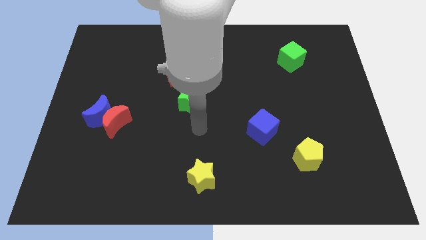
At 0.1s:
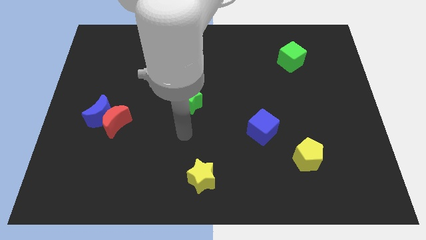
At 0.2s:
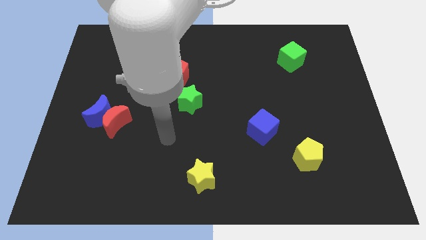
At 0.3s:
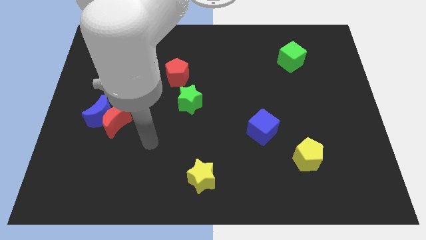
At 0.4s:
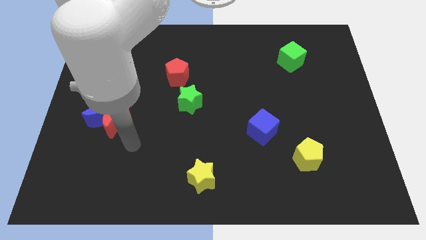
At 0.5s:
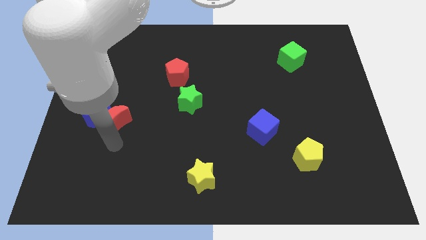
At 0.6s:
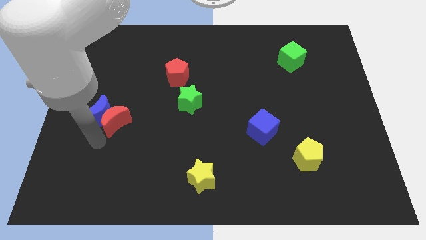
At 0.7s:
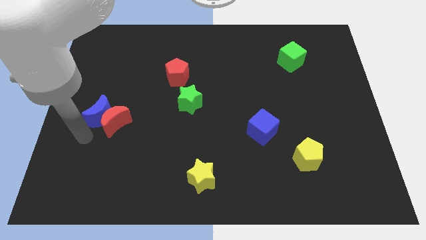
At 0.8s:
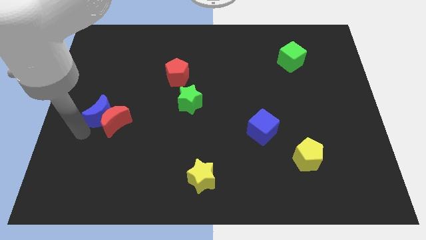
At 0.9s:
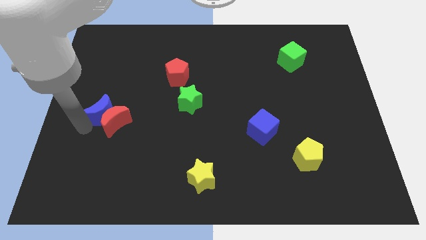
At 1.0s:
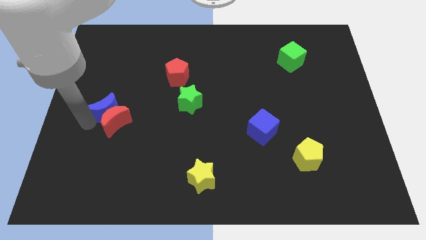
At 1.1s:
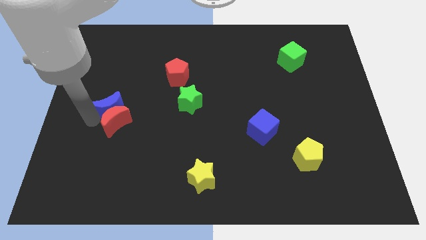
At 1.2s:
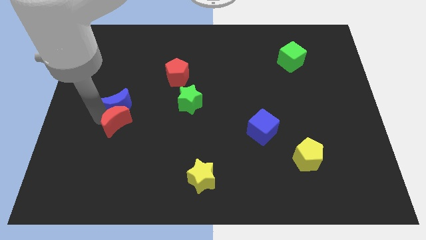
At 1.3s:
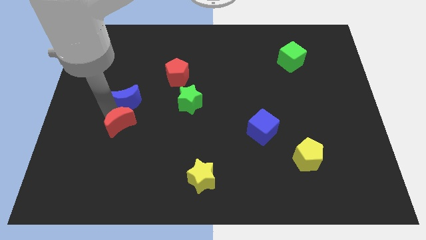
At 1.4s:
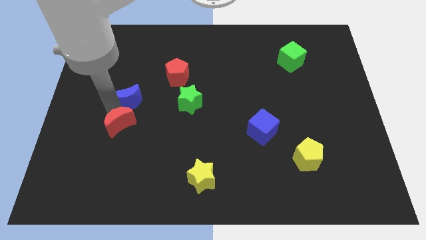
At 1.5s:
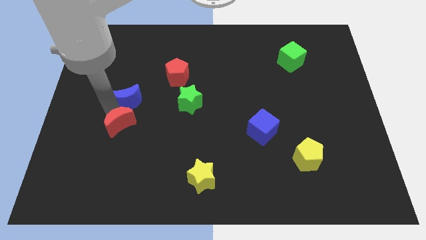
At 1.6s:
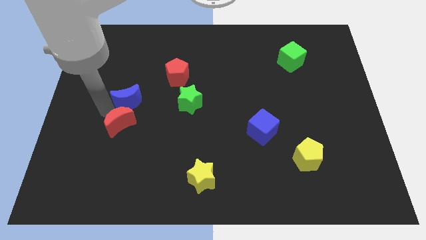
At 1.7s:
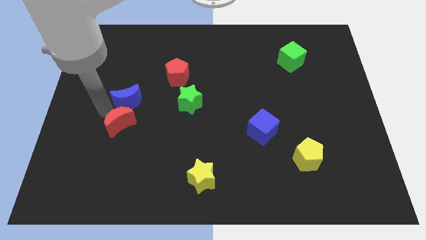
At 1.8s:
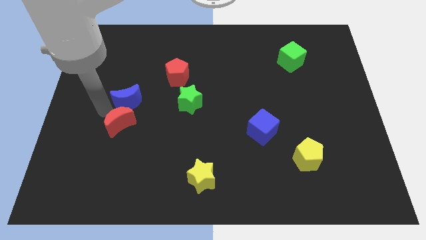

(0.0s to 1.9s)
slightly push the blue moon parallel to green star

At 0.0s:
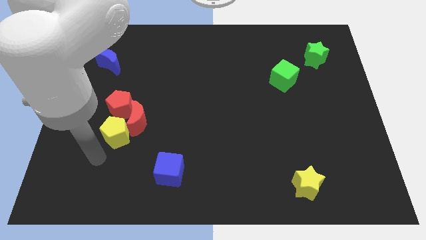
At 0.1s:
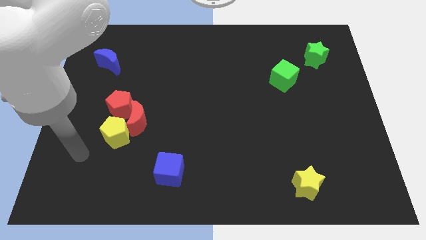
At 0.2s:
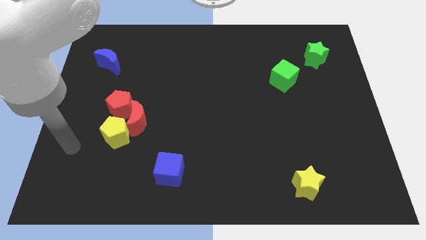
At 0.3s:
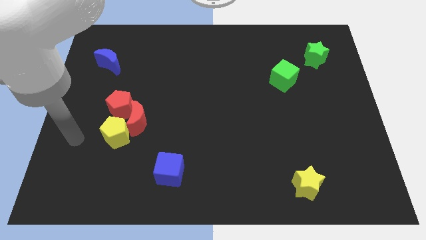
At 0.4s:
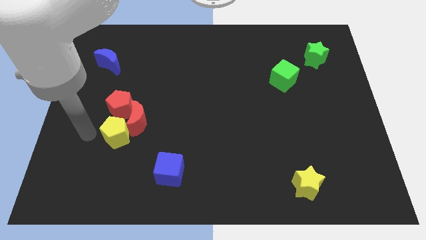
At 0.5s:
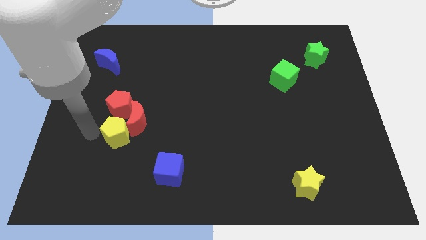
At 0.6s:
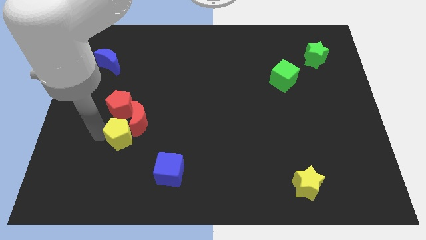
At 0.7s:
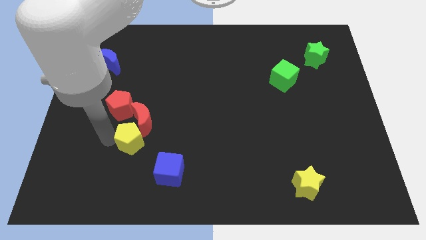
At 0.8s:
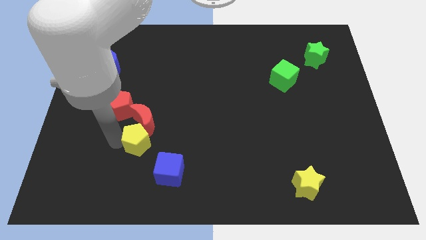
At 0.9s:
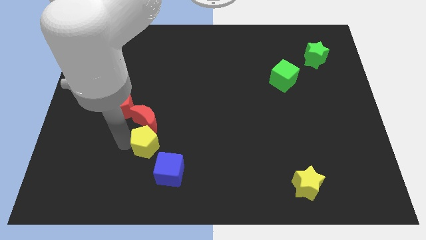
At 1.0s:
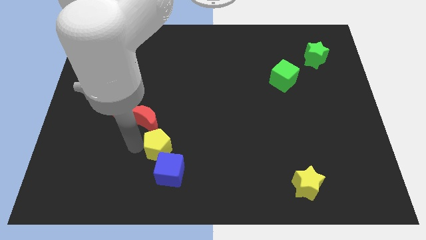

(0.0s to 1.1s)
place yellow pentagon in between blue cube and red moon

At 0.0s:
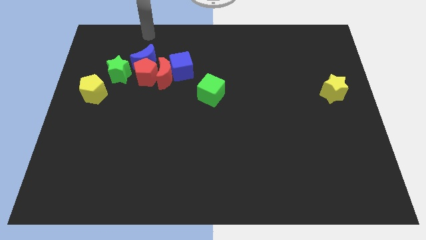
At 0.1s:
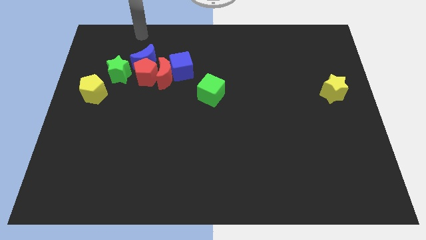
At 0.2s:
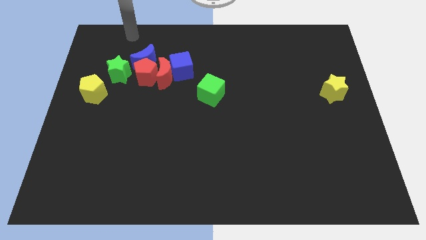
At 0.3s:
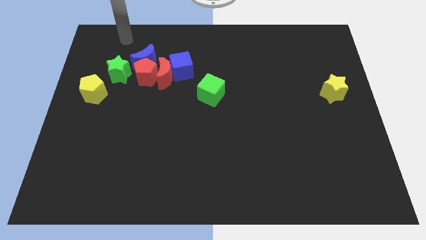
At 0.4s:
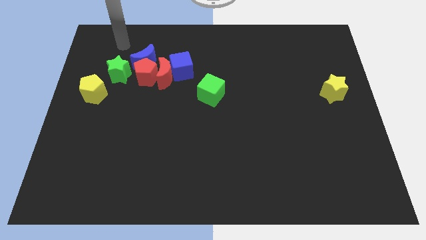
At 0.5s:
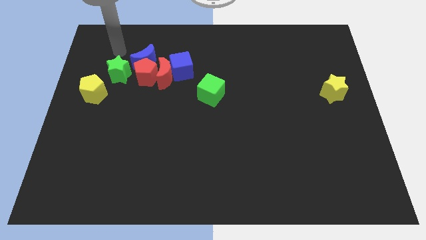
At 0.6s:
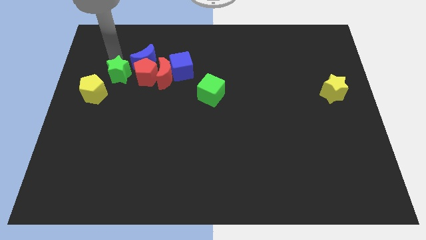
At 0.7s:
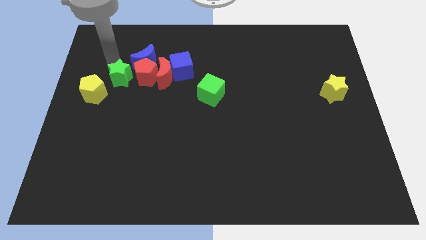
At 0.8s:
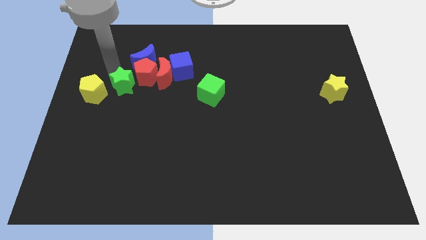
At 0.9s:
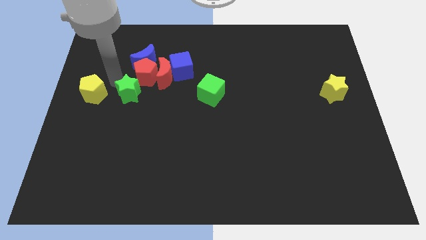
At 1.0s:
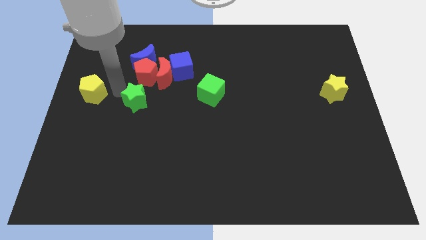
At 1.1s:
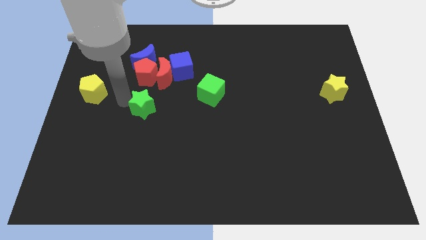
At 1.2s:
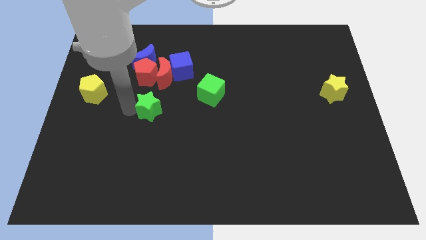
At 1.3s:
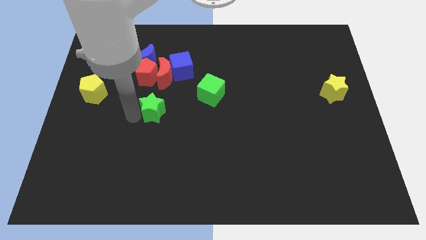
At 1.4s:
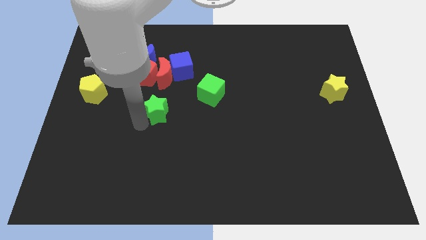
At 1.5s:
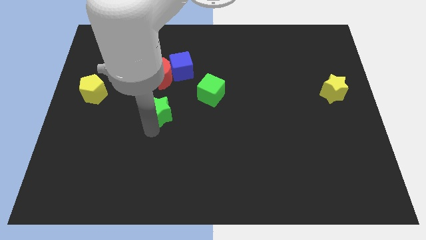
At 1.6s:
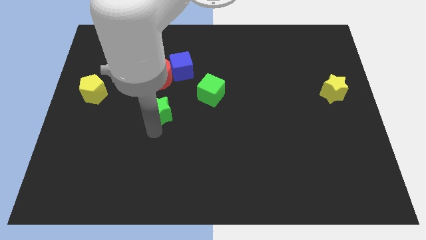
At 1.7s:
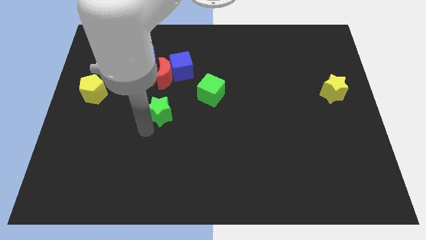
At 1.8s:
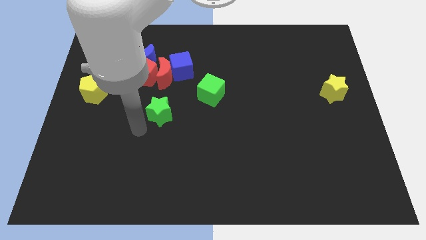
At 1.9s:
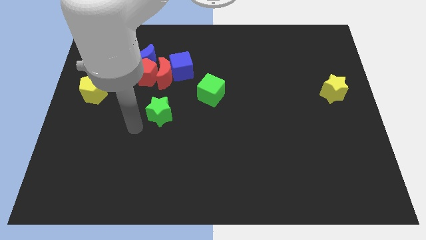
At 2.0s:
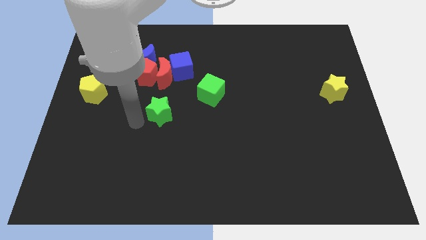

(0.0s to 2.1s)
place green star below the red moon vertically

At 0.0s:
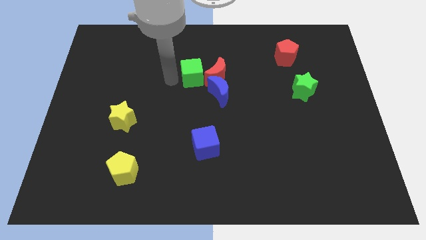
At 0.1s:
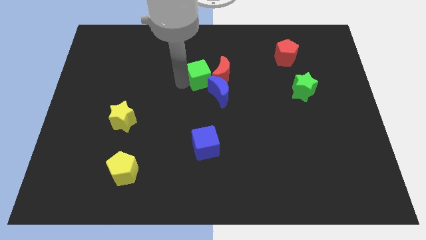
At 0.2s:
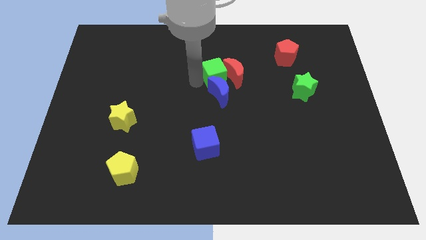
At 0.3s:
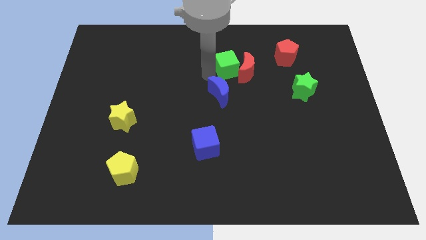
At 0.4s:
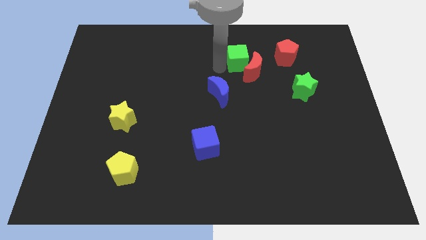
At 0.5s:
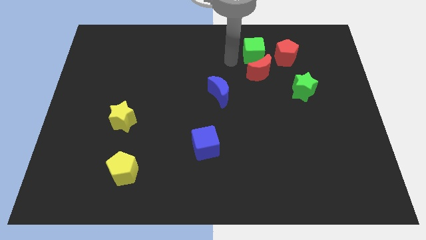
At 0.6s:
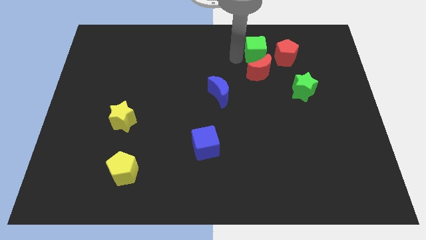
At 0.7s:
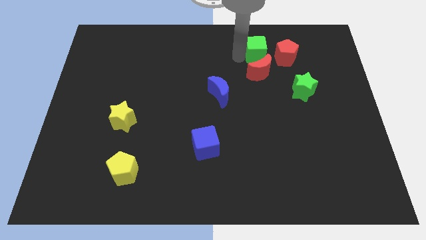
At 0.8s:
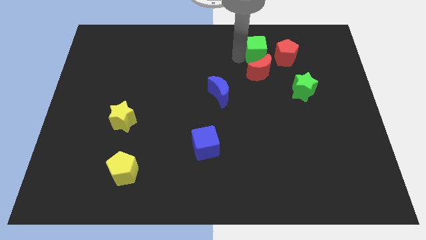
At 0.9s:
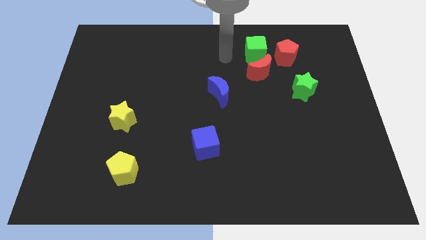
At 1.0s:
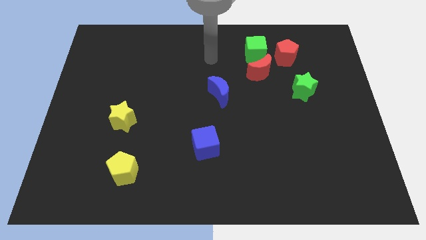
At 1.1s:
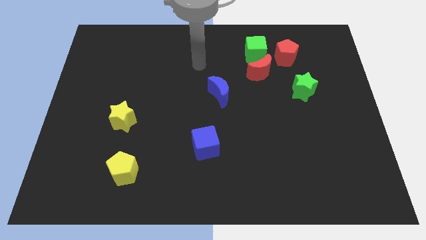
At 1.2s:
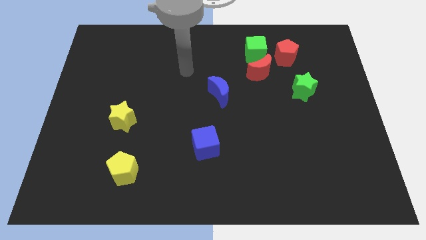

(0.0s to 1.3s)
push the red moon and green cube towards the red pentagon

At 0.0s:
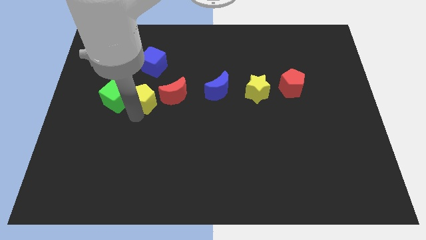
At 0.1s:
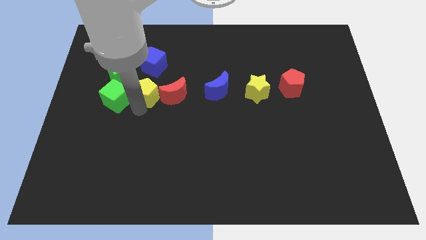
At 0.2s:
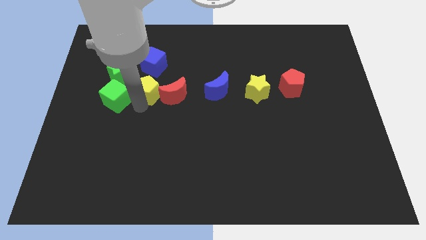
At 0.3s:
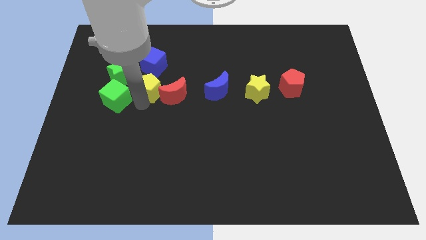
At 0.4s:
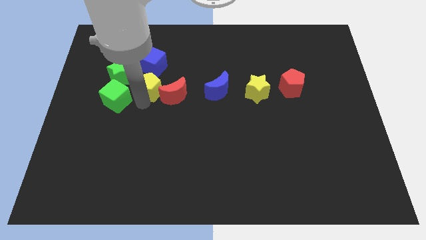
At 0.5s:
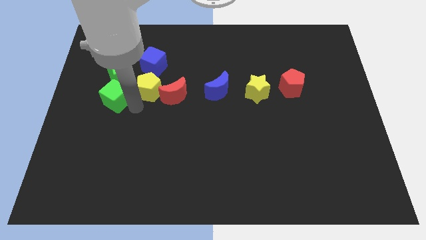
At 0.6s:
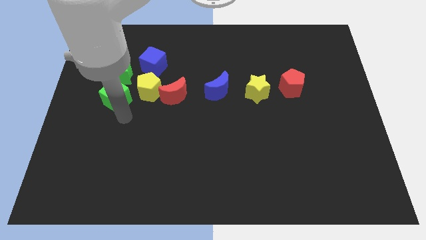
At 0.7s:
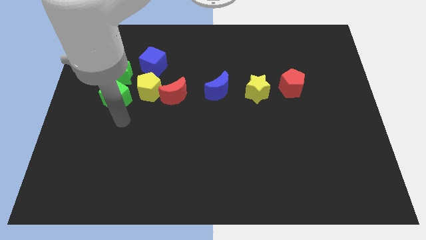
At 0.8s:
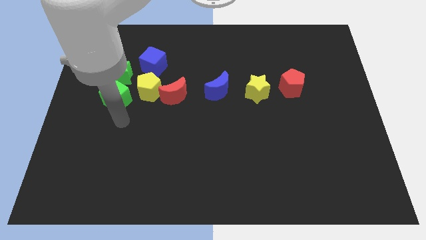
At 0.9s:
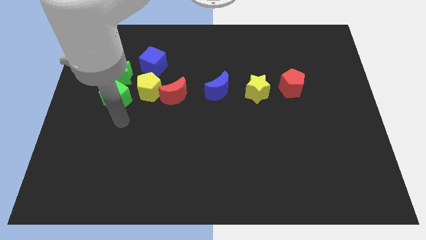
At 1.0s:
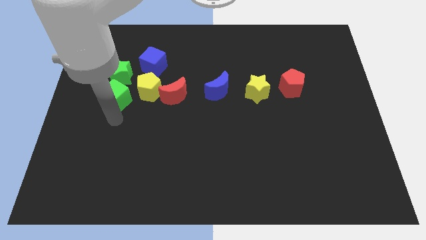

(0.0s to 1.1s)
slide the yellow pentagon towards the blue cube

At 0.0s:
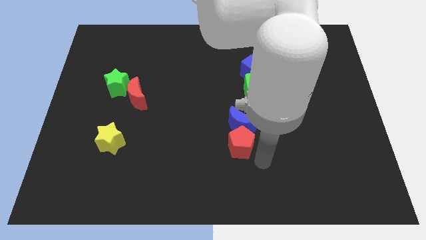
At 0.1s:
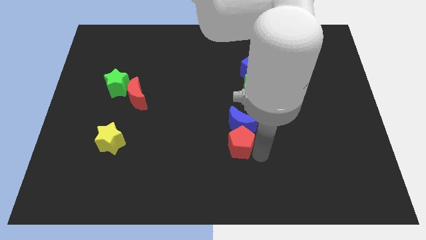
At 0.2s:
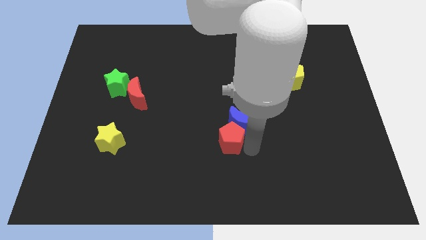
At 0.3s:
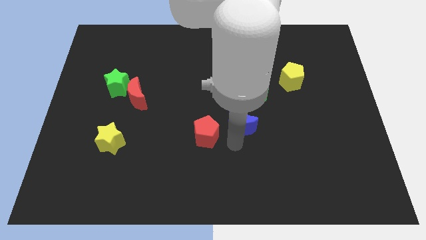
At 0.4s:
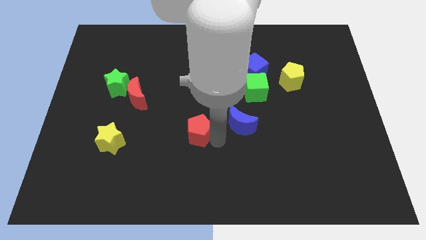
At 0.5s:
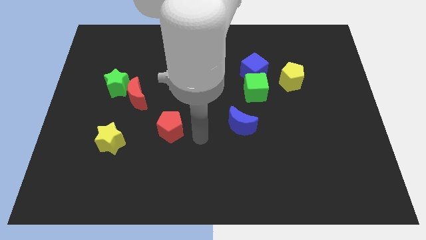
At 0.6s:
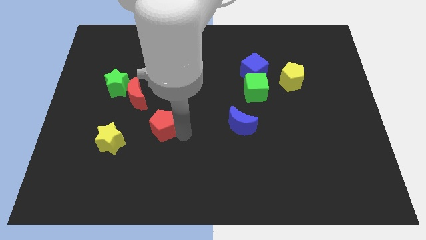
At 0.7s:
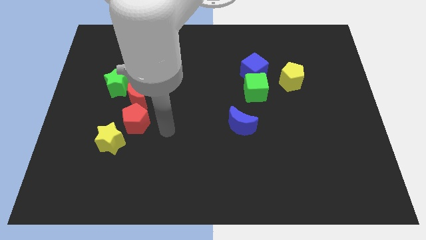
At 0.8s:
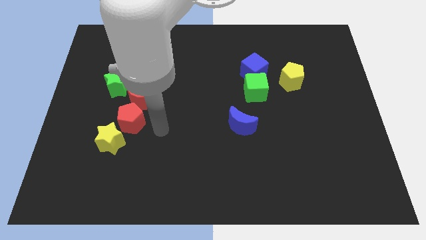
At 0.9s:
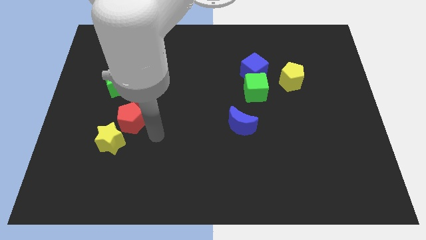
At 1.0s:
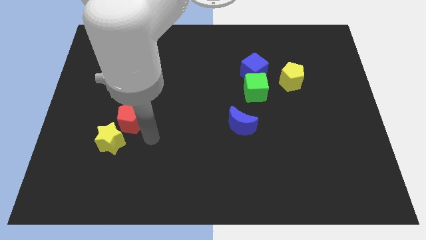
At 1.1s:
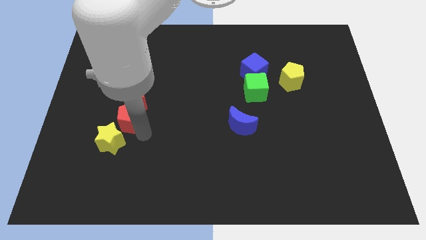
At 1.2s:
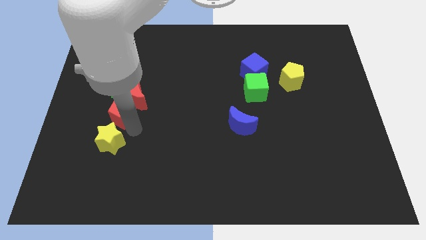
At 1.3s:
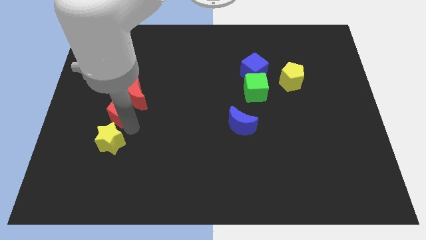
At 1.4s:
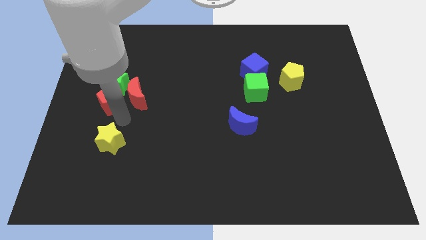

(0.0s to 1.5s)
place the red pentagon in between the green and yellow stars
